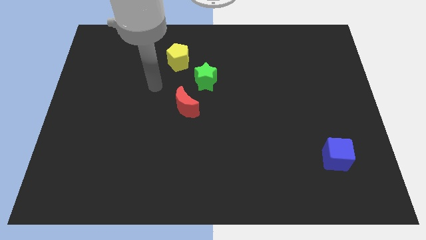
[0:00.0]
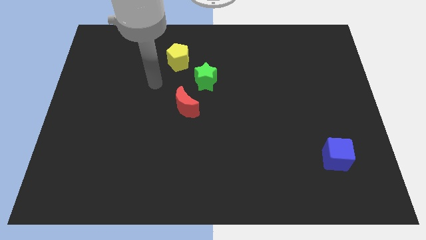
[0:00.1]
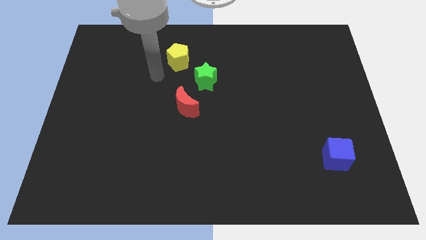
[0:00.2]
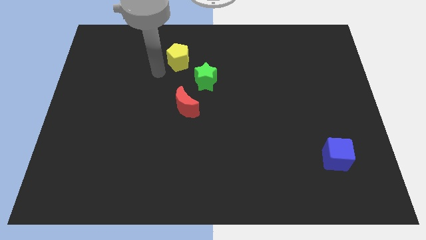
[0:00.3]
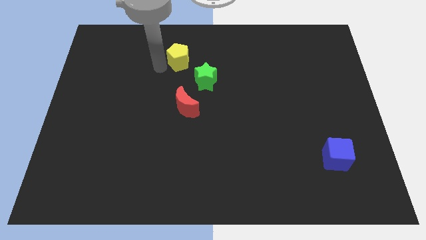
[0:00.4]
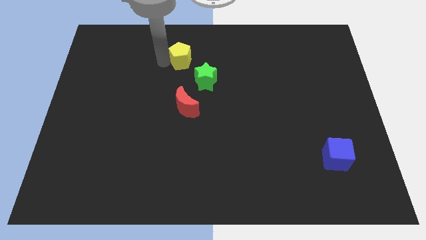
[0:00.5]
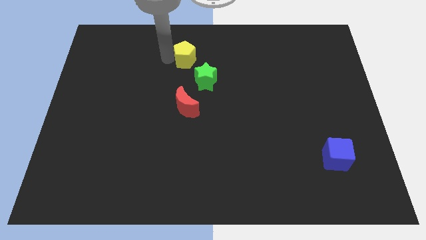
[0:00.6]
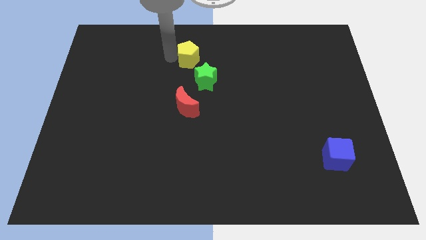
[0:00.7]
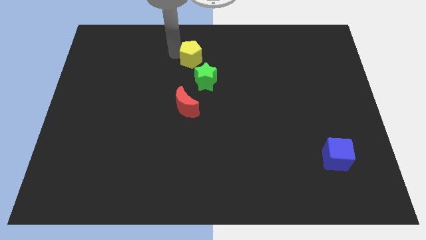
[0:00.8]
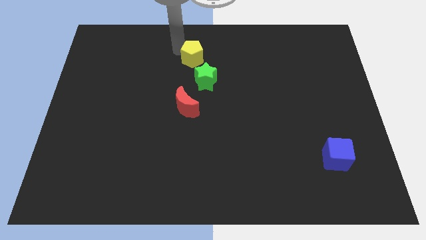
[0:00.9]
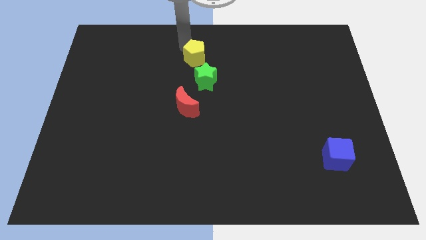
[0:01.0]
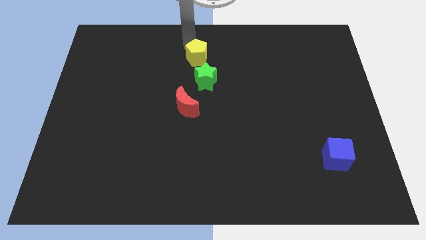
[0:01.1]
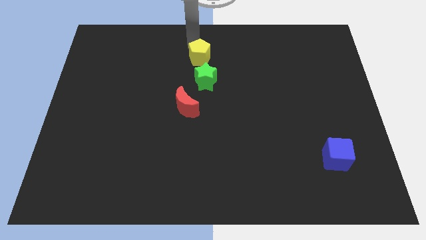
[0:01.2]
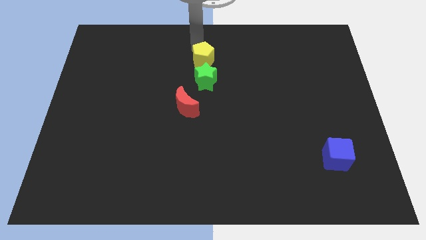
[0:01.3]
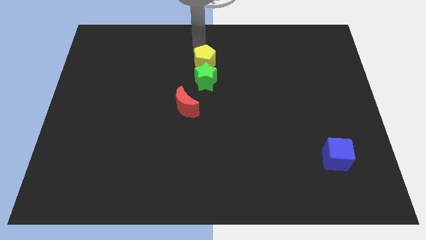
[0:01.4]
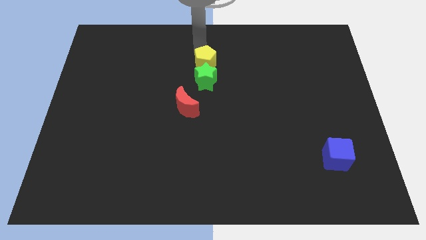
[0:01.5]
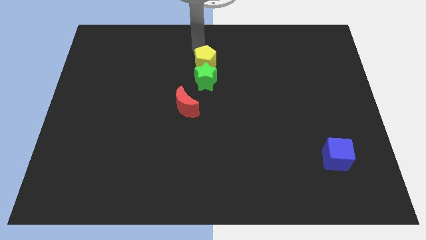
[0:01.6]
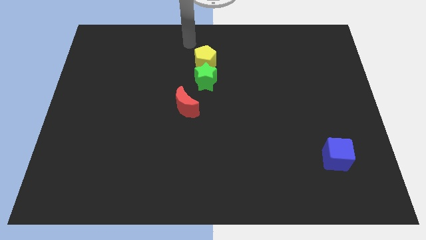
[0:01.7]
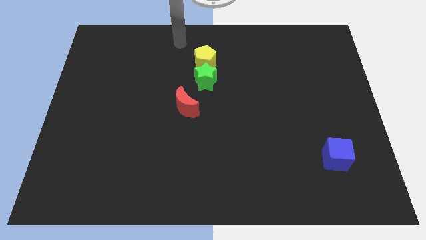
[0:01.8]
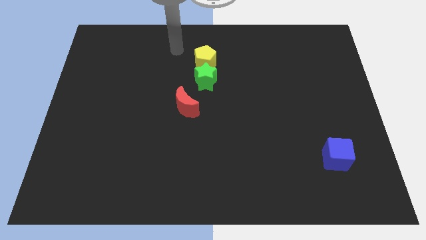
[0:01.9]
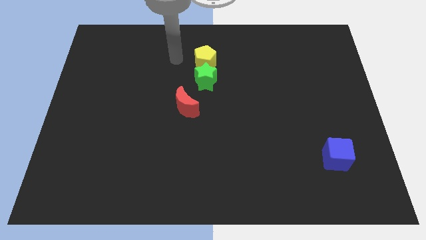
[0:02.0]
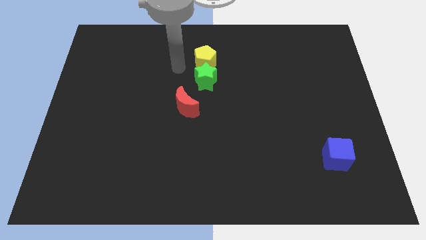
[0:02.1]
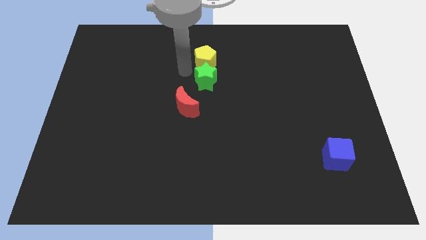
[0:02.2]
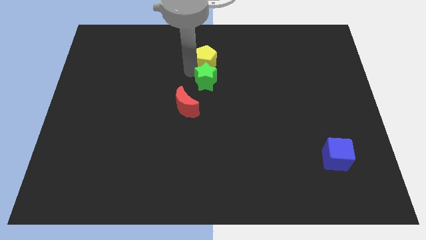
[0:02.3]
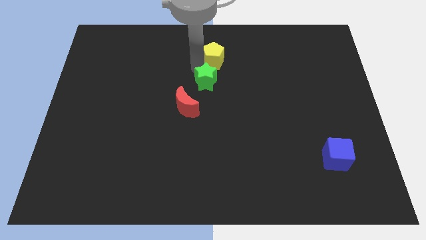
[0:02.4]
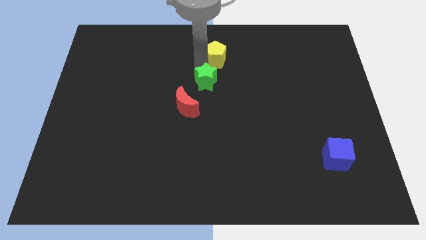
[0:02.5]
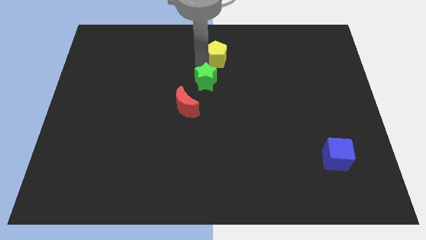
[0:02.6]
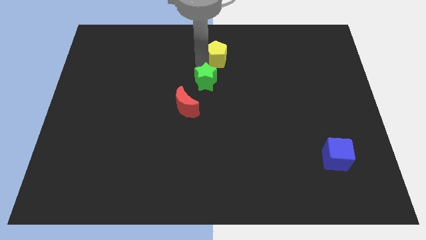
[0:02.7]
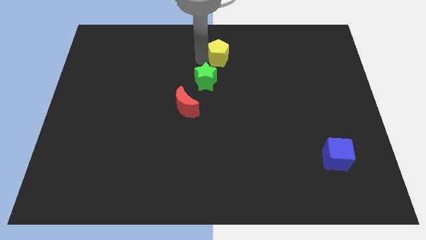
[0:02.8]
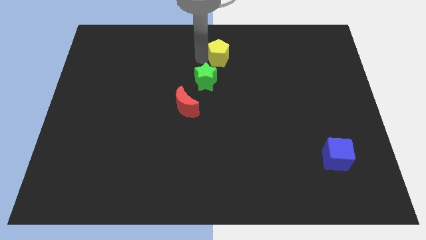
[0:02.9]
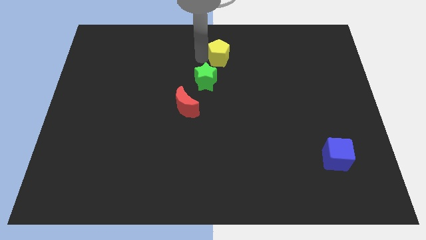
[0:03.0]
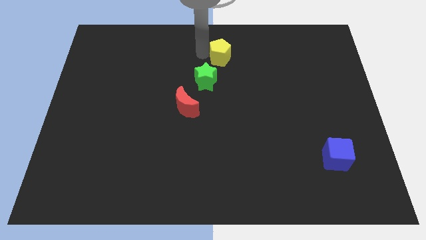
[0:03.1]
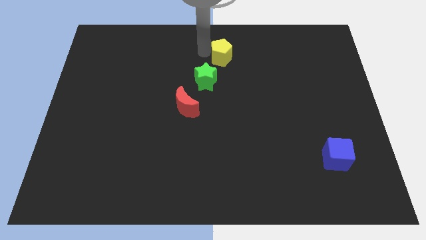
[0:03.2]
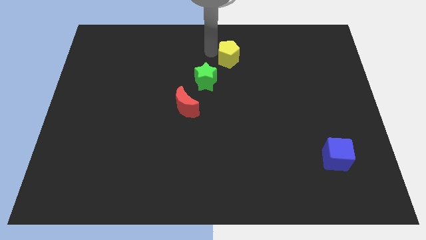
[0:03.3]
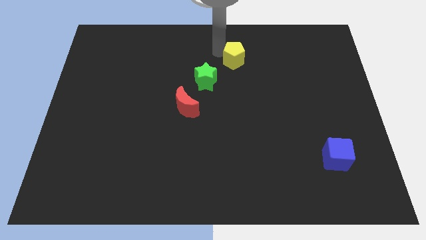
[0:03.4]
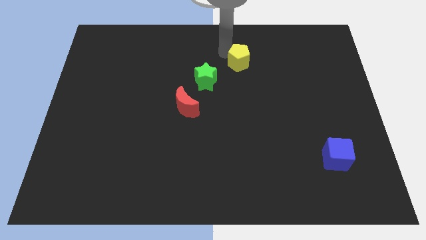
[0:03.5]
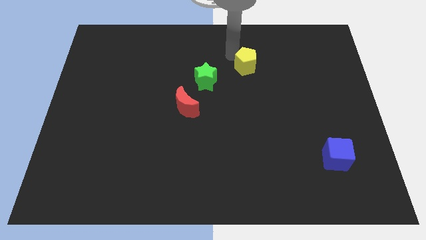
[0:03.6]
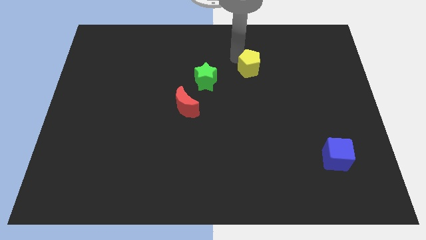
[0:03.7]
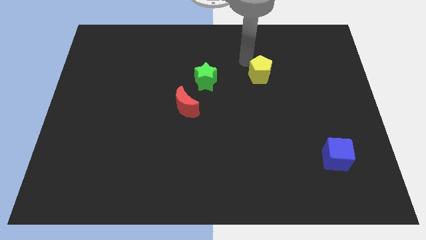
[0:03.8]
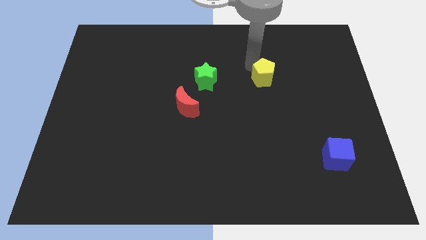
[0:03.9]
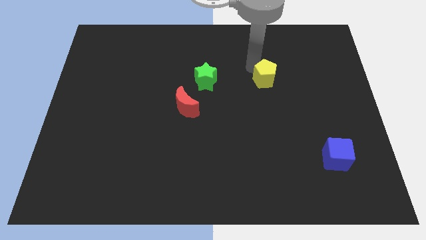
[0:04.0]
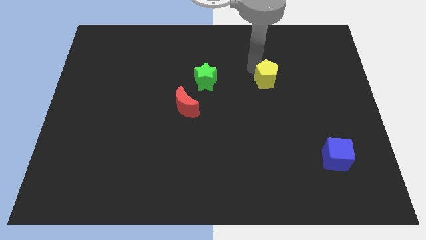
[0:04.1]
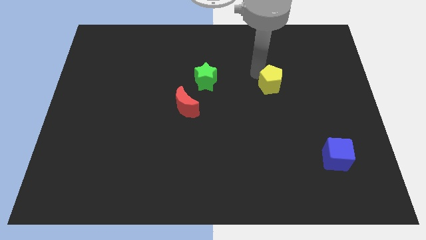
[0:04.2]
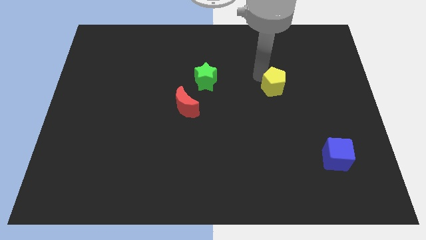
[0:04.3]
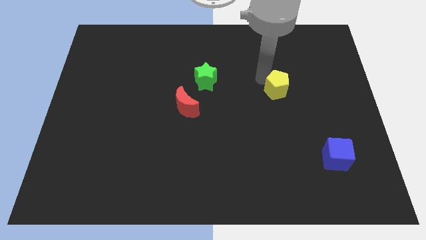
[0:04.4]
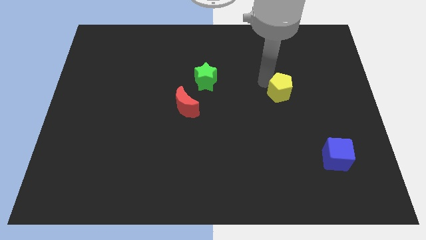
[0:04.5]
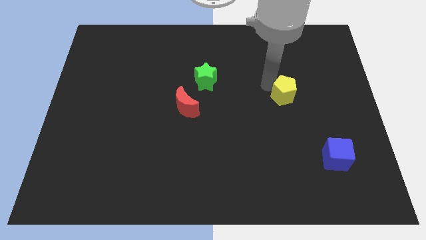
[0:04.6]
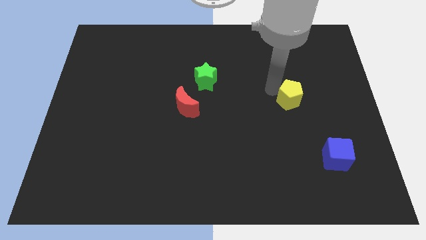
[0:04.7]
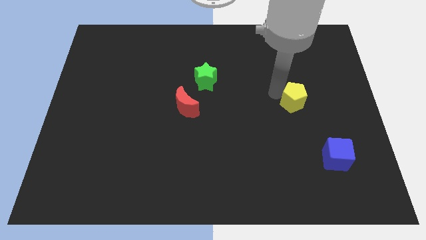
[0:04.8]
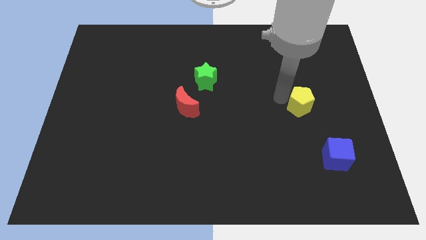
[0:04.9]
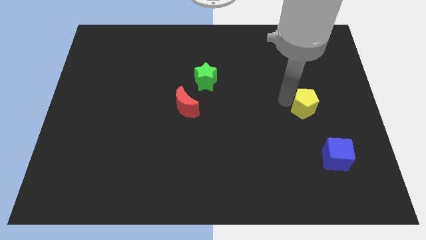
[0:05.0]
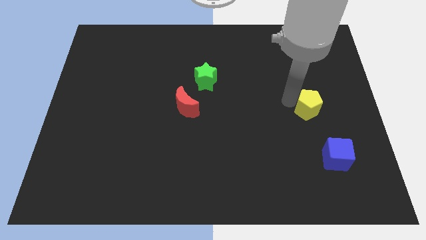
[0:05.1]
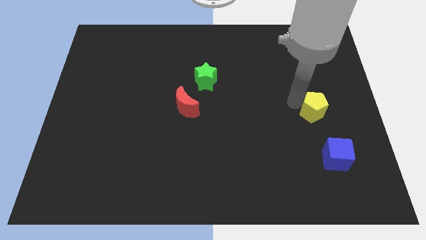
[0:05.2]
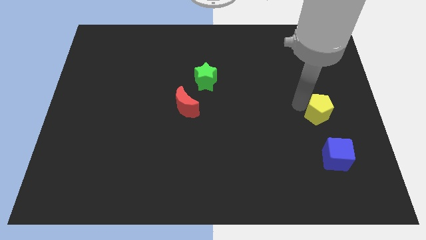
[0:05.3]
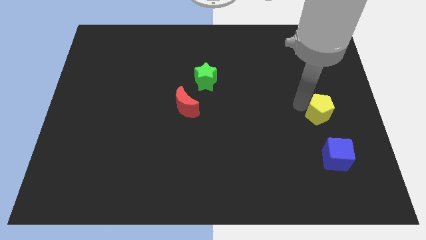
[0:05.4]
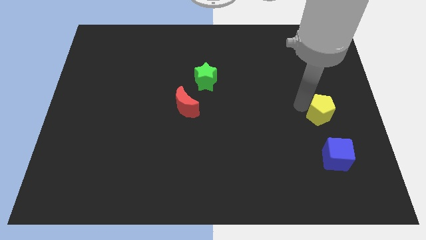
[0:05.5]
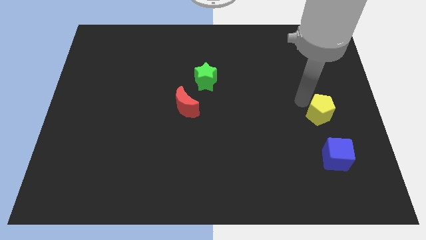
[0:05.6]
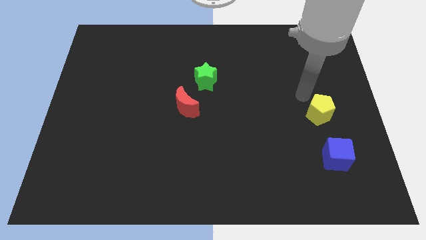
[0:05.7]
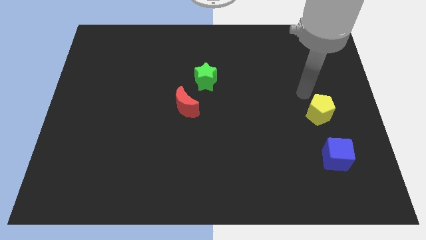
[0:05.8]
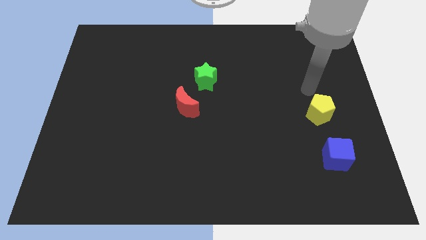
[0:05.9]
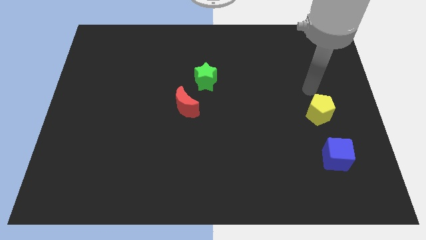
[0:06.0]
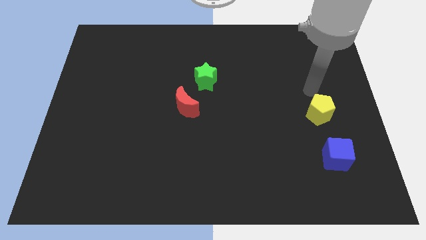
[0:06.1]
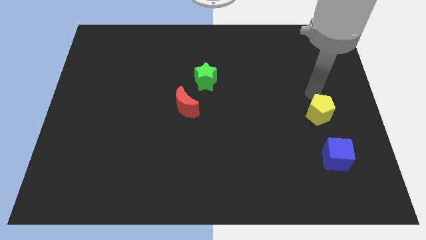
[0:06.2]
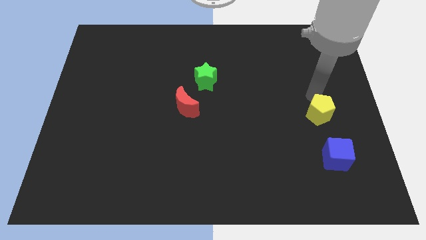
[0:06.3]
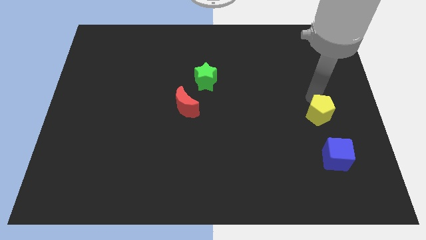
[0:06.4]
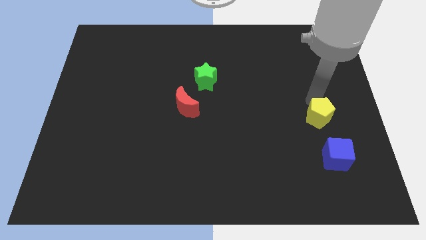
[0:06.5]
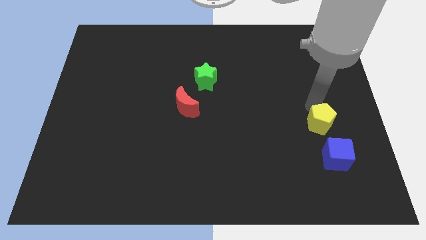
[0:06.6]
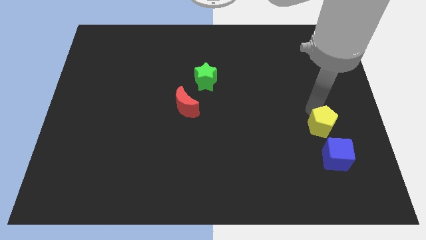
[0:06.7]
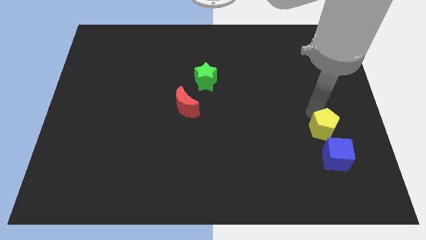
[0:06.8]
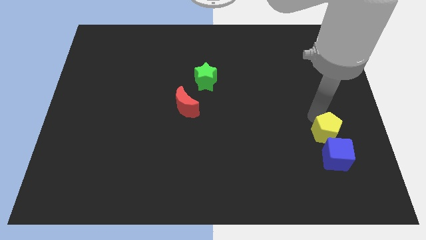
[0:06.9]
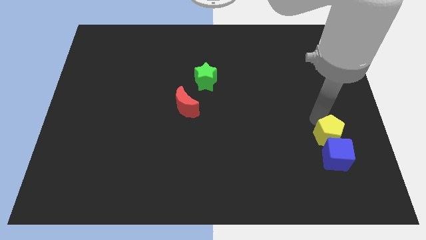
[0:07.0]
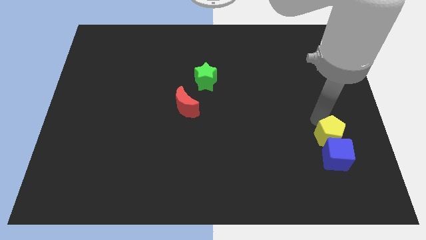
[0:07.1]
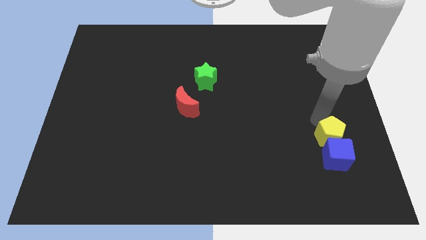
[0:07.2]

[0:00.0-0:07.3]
push the yellow block close to the blue block

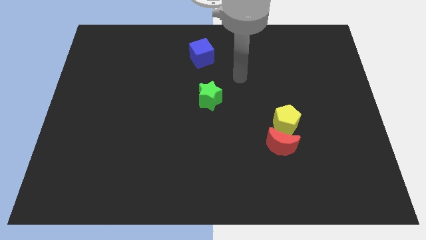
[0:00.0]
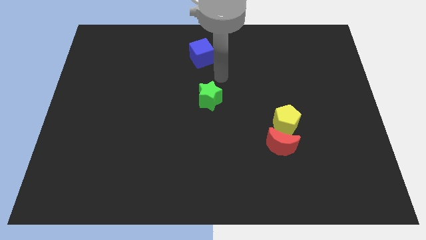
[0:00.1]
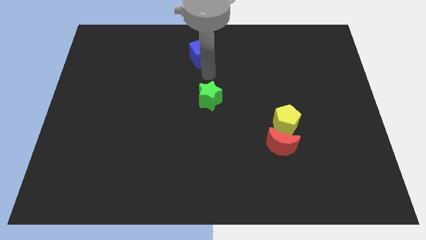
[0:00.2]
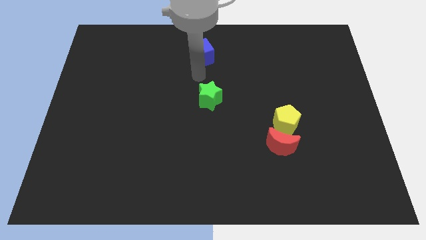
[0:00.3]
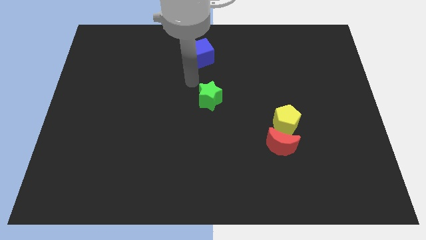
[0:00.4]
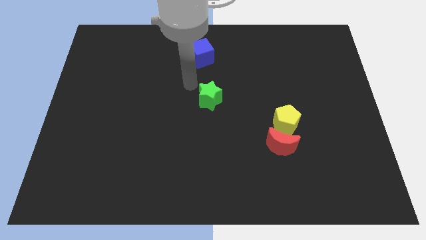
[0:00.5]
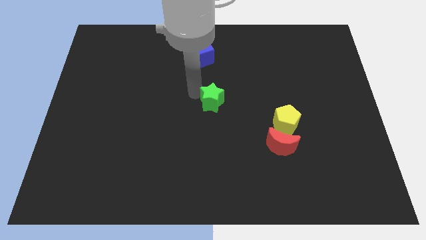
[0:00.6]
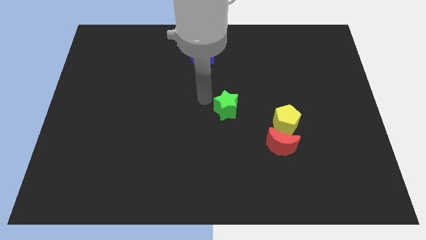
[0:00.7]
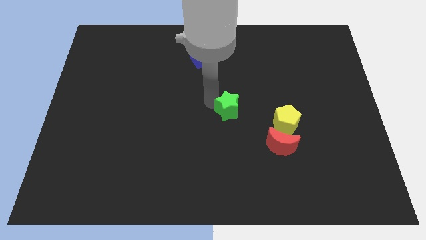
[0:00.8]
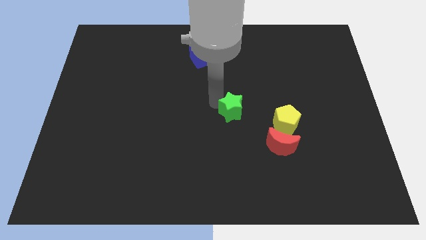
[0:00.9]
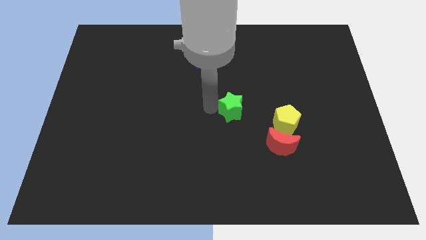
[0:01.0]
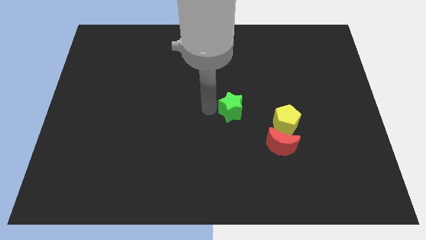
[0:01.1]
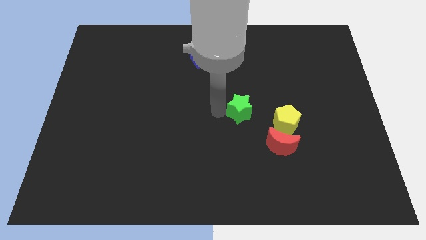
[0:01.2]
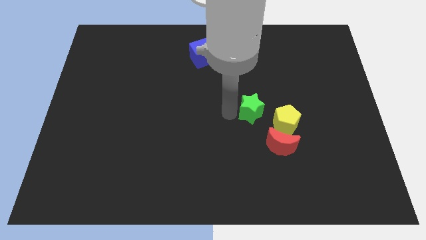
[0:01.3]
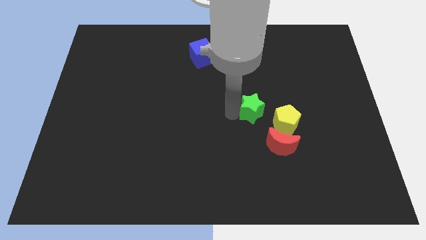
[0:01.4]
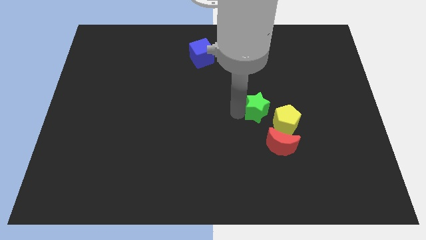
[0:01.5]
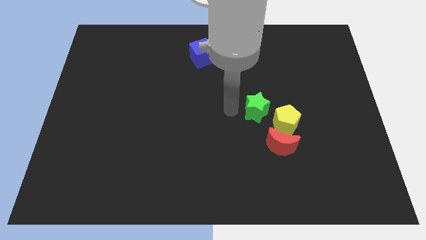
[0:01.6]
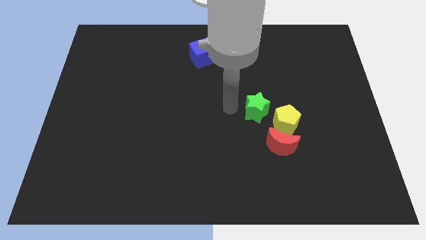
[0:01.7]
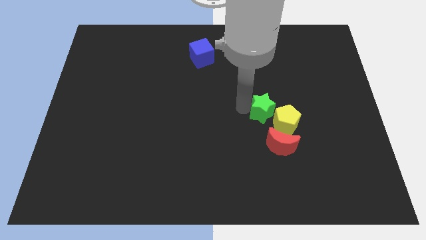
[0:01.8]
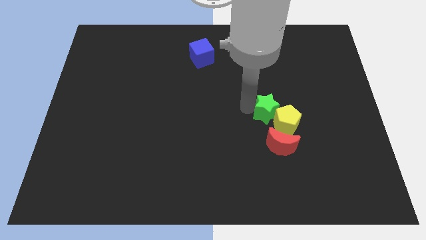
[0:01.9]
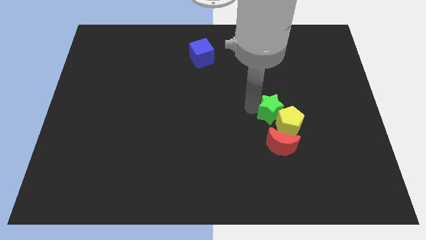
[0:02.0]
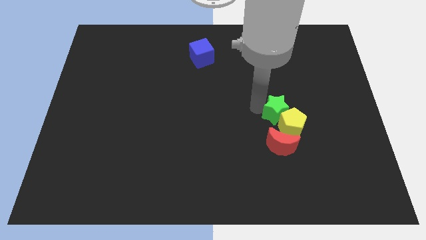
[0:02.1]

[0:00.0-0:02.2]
push the star to the pentagon
